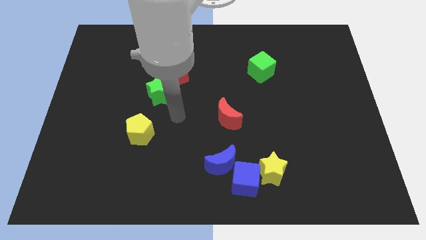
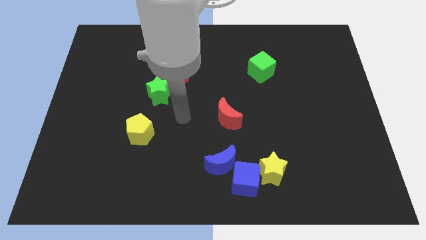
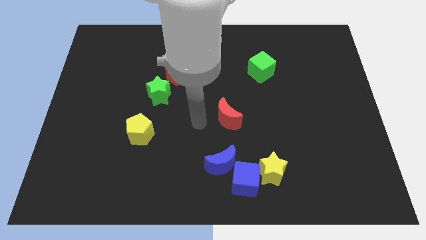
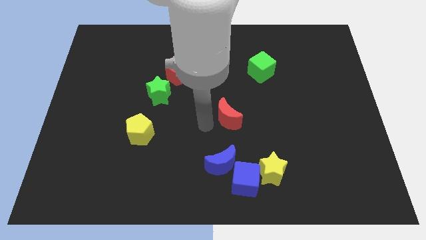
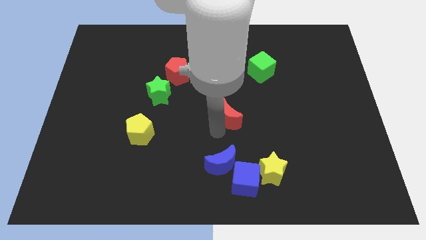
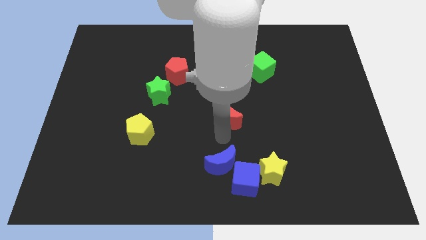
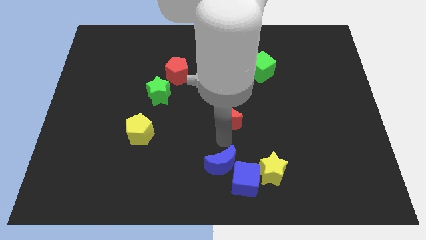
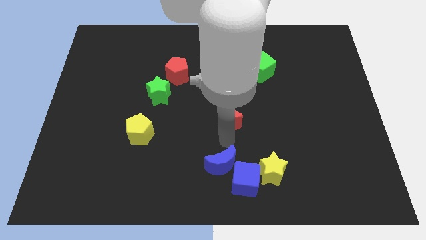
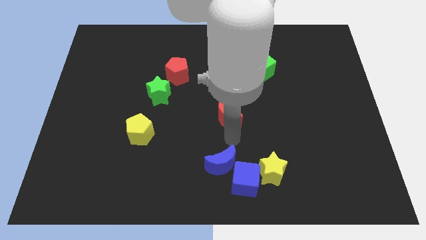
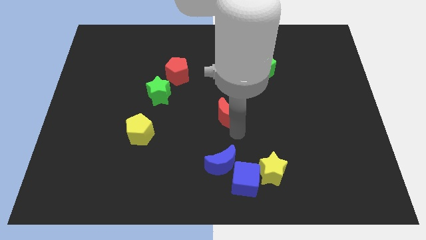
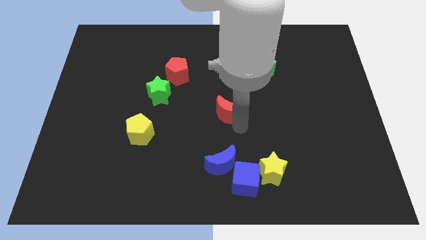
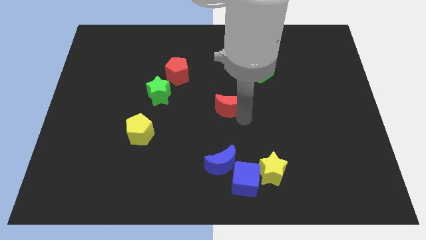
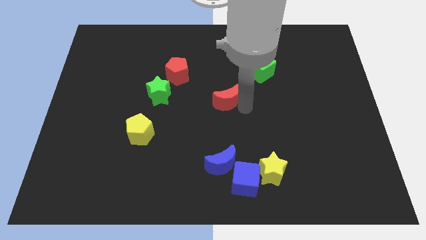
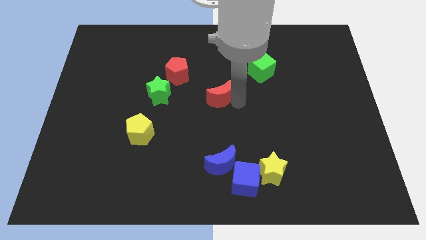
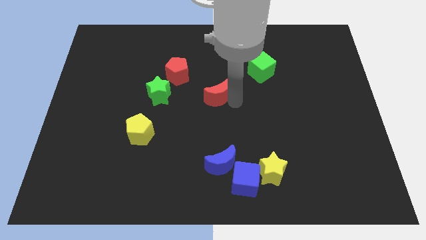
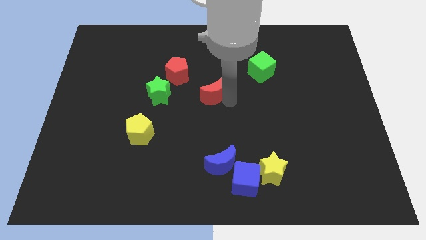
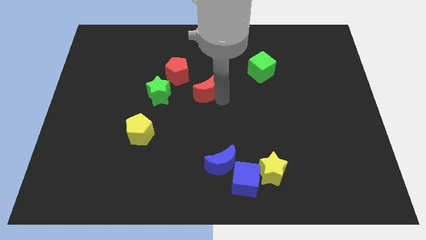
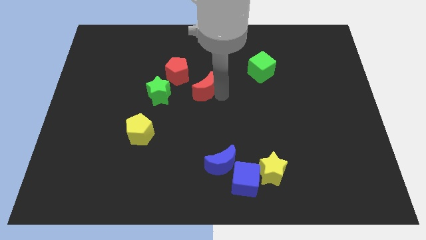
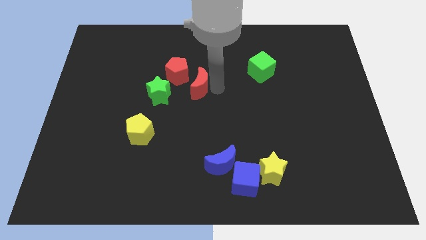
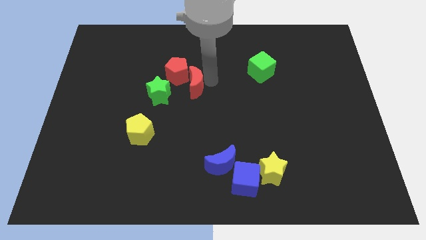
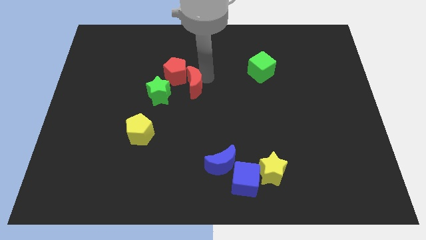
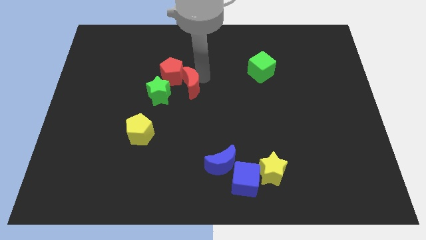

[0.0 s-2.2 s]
move the red moon close to the red pentagon

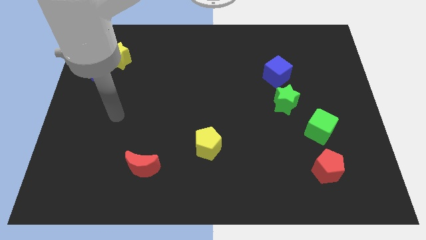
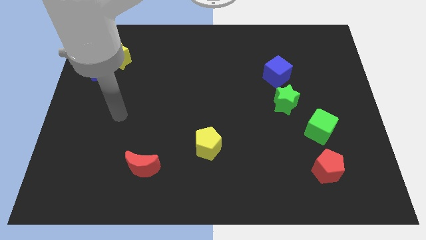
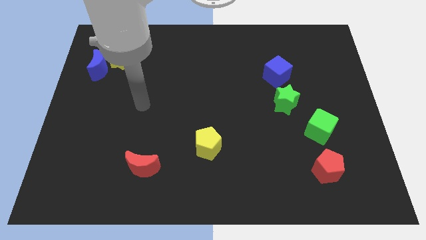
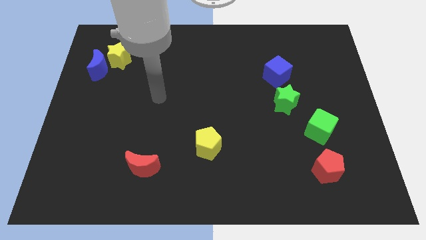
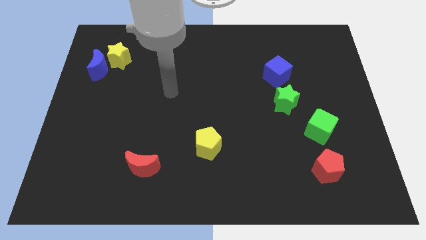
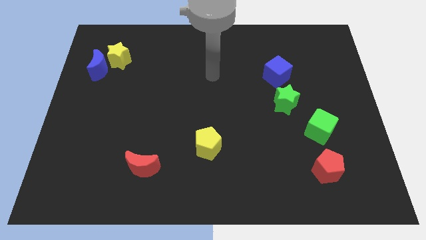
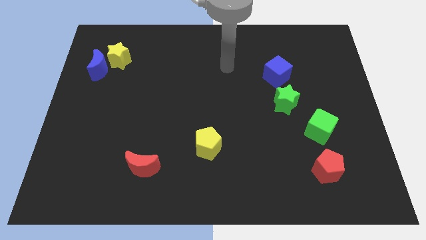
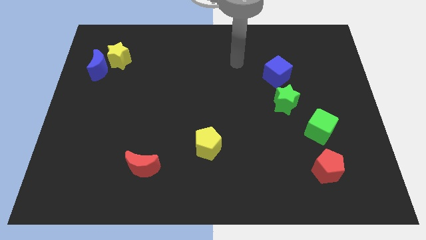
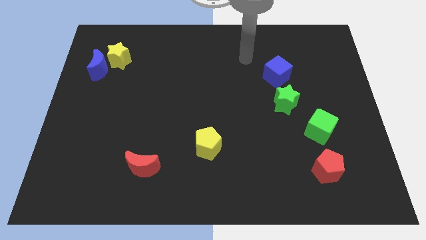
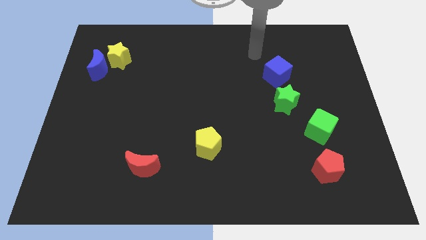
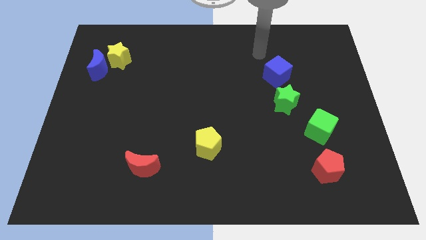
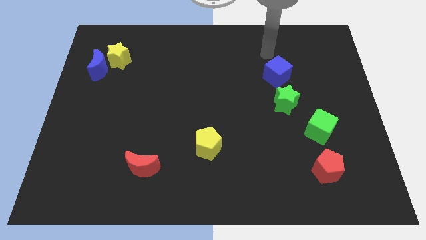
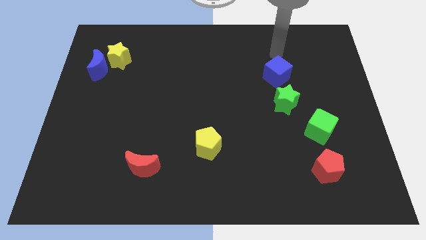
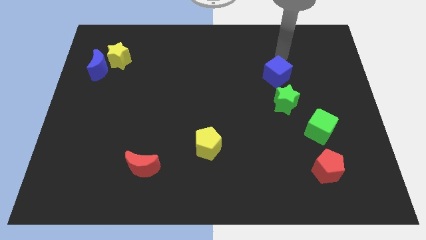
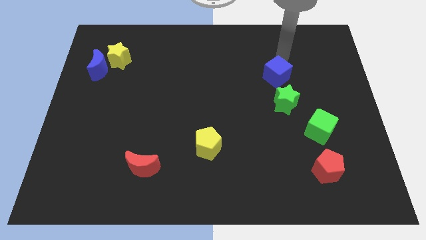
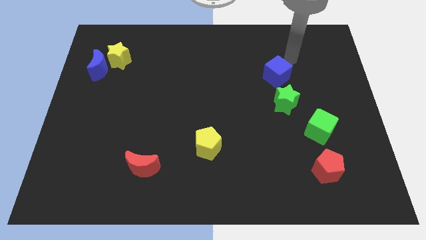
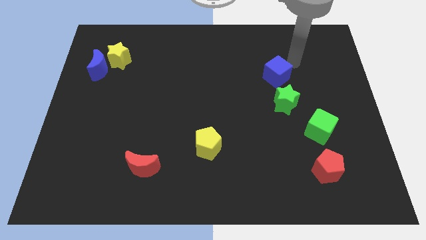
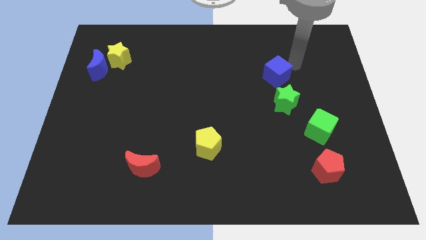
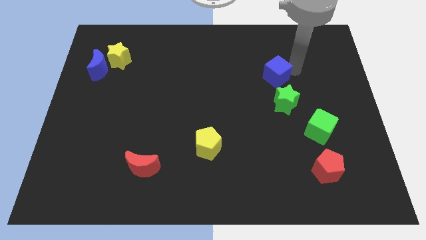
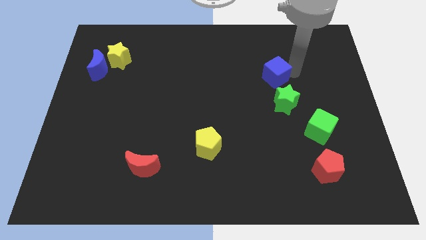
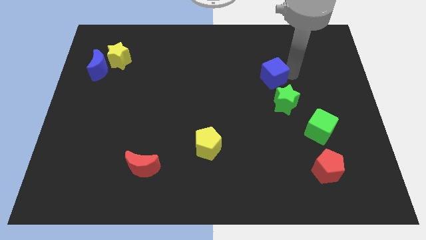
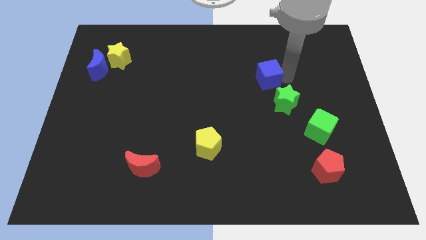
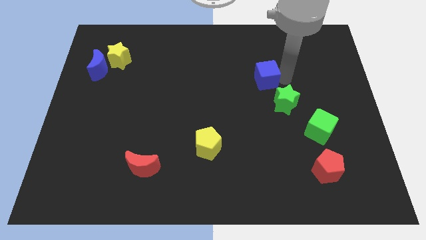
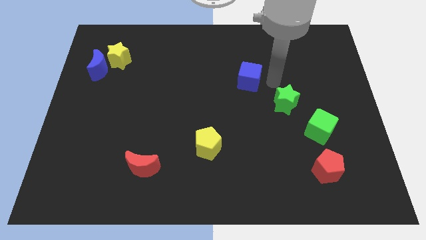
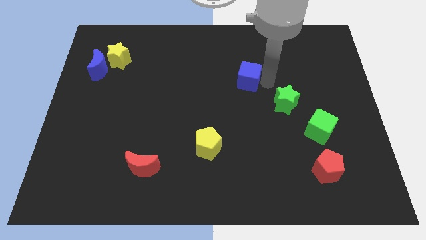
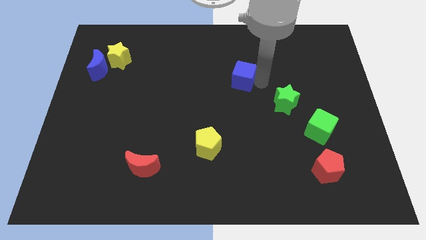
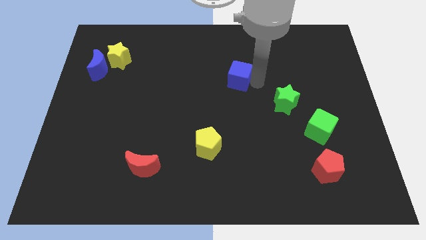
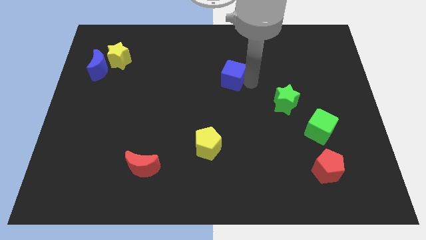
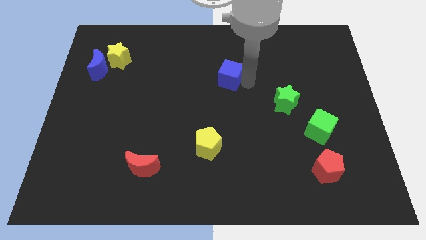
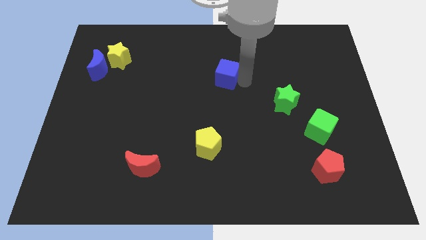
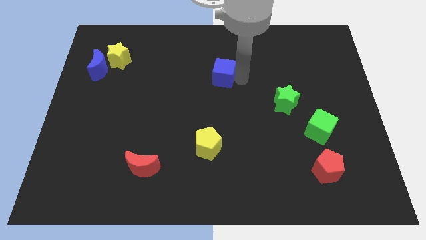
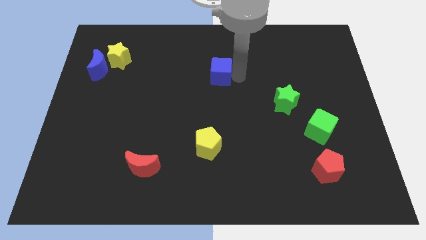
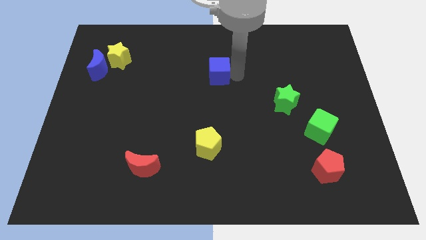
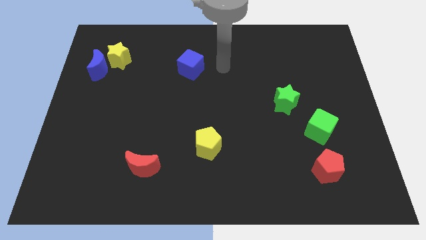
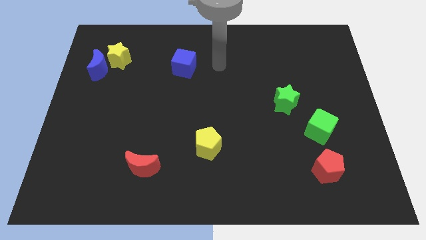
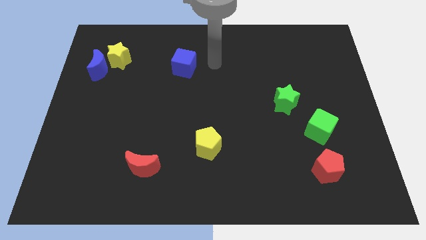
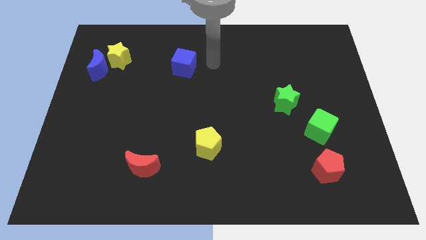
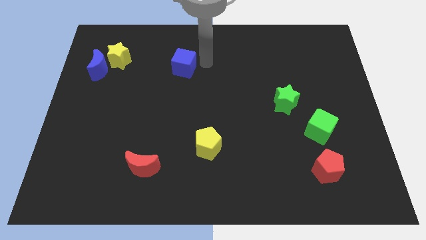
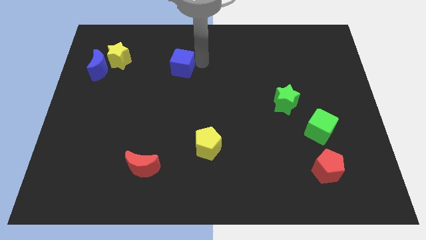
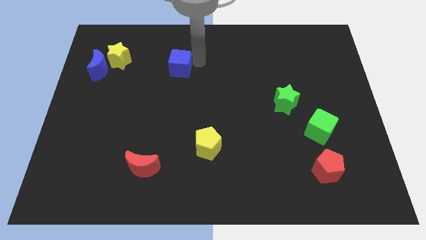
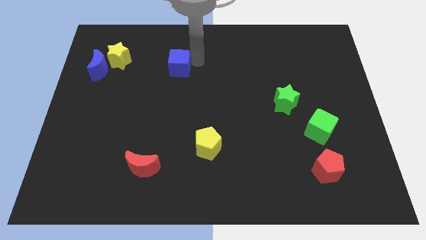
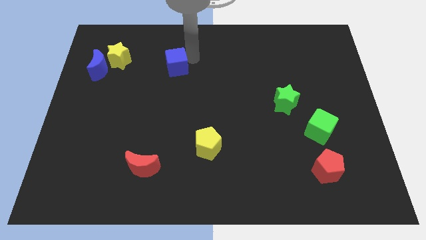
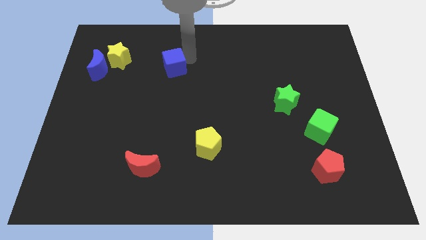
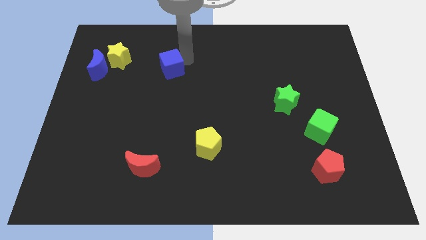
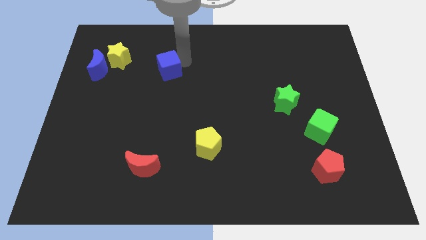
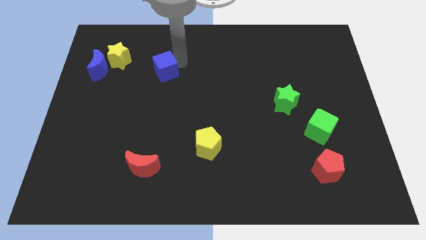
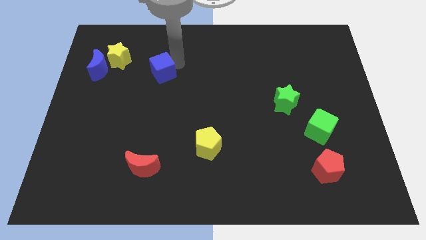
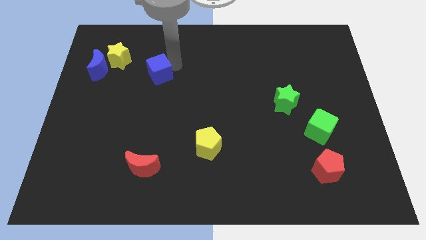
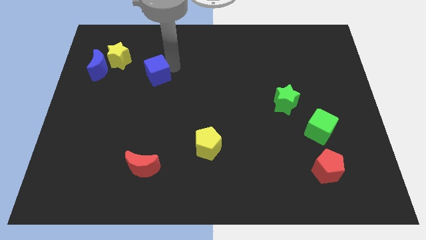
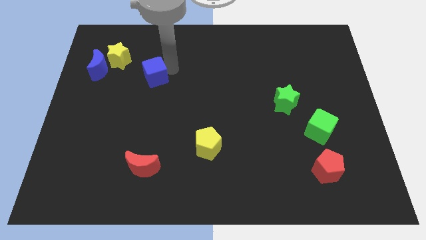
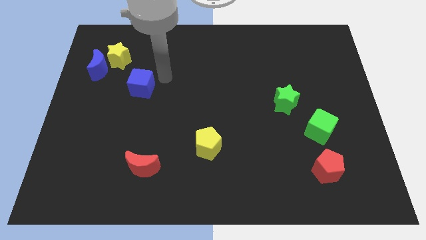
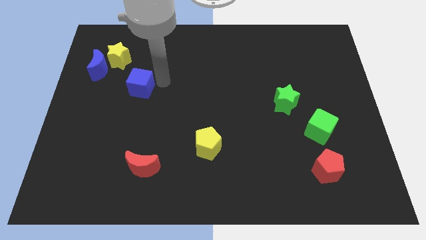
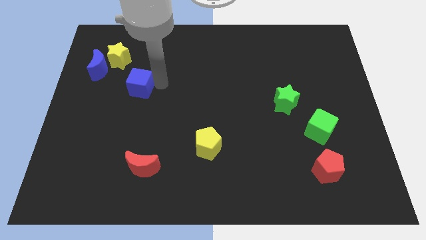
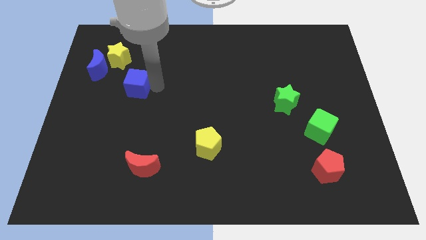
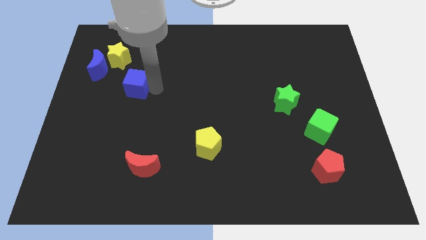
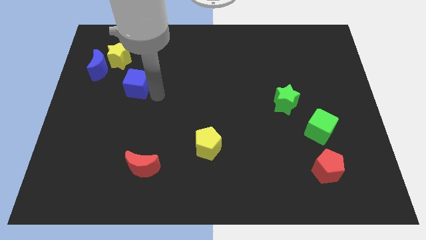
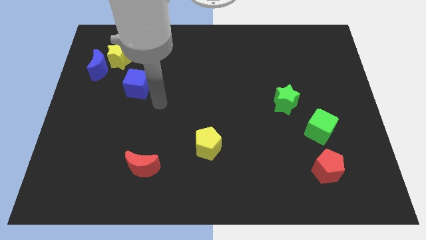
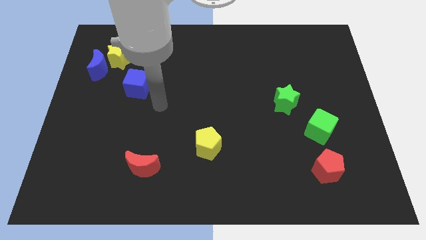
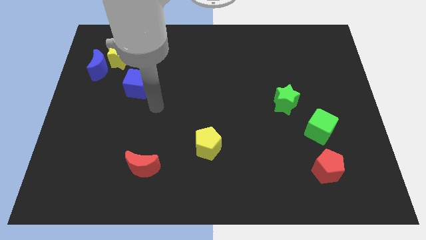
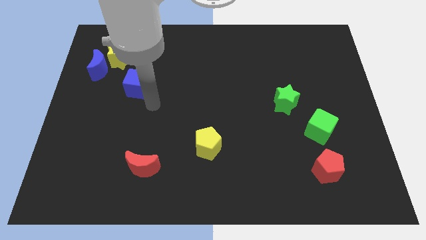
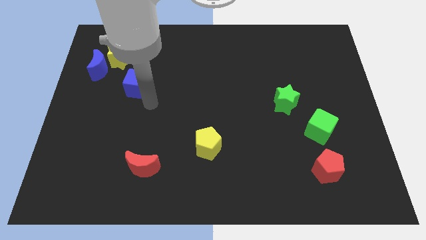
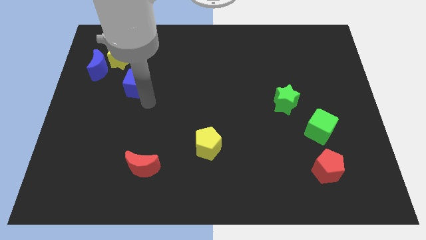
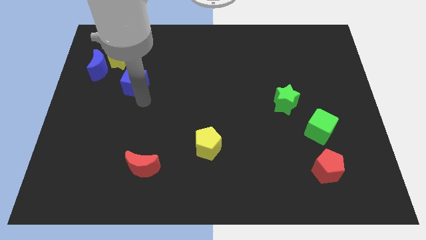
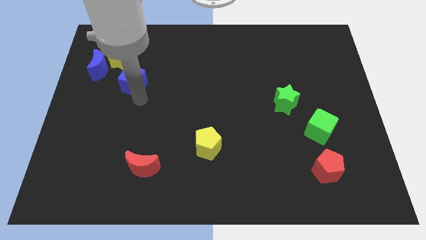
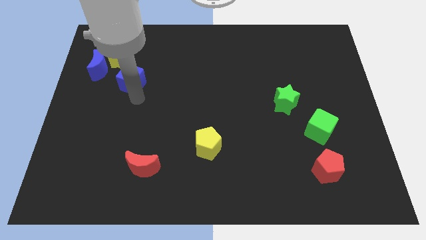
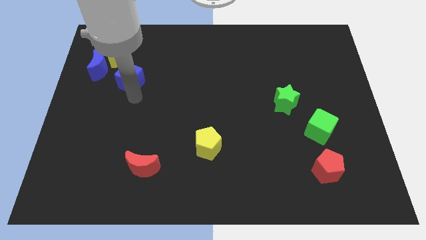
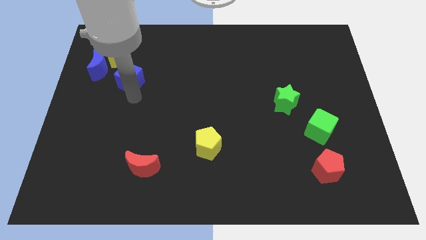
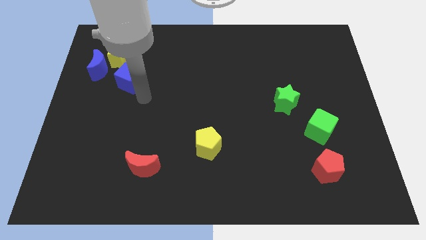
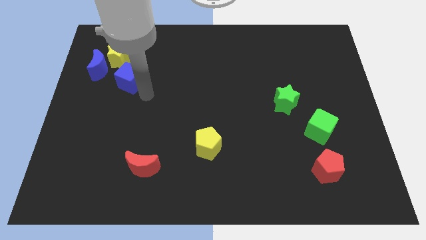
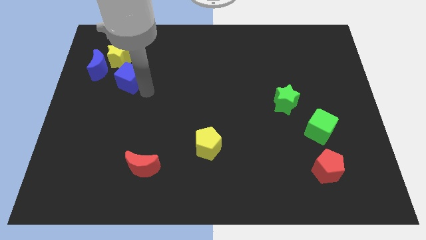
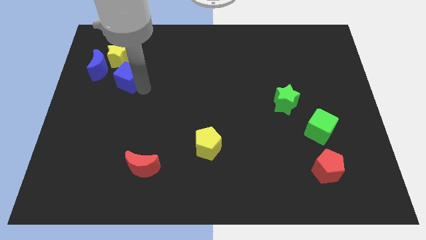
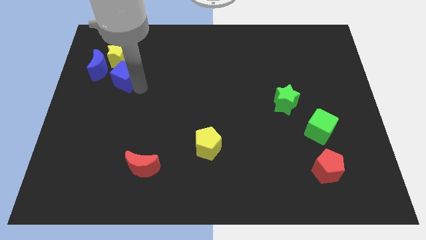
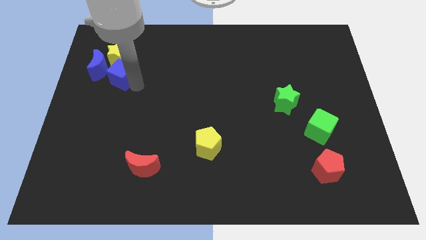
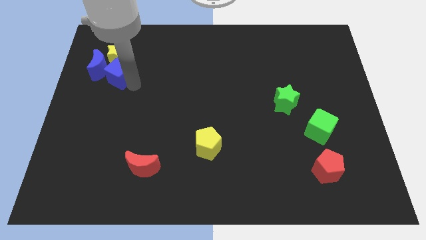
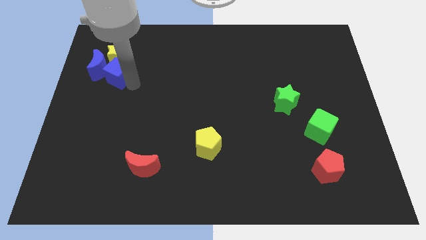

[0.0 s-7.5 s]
put the blue cube next to the blue moon
